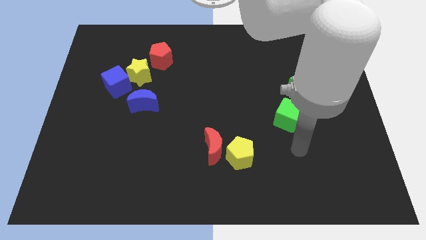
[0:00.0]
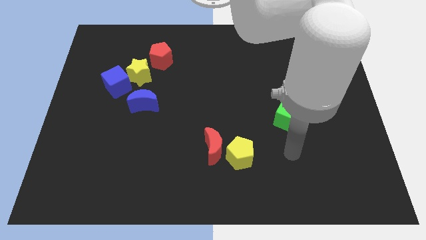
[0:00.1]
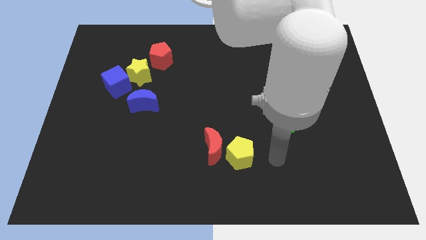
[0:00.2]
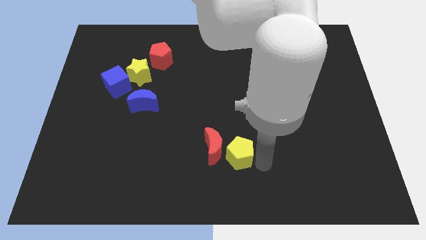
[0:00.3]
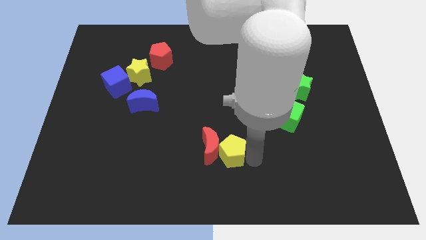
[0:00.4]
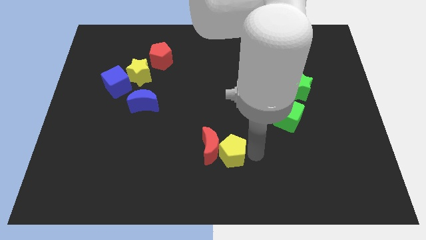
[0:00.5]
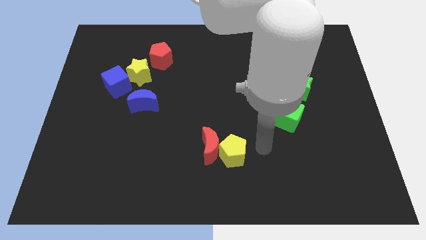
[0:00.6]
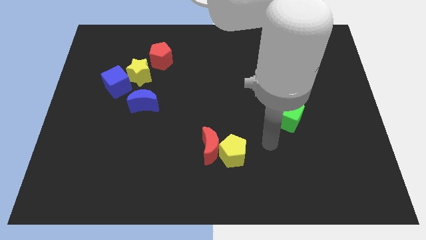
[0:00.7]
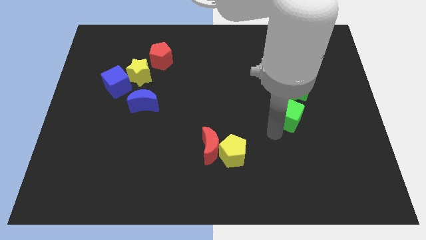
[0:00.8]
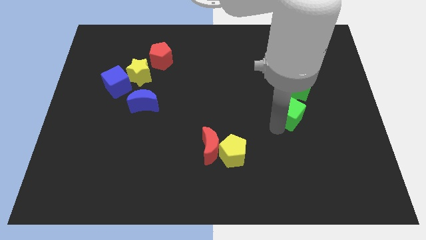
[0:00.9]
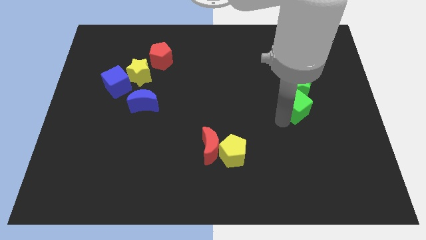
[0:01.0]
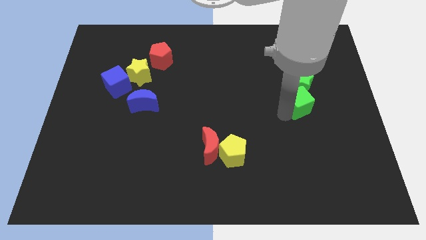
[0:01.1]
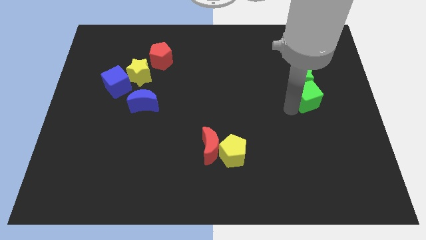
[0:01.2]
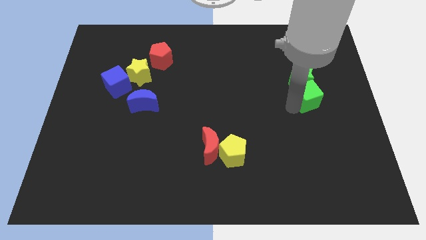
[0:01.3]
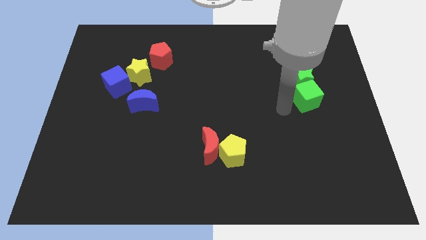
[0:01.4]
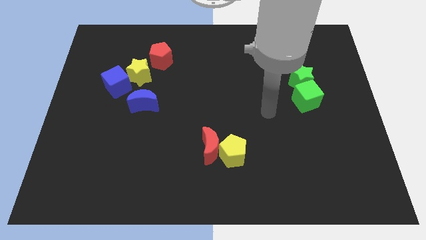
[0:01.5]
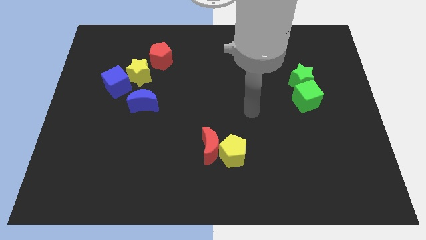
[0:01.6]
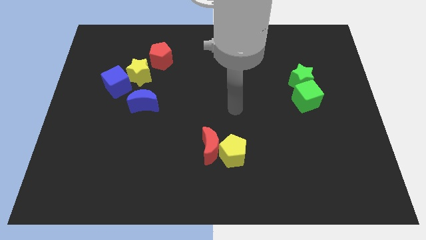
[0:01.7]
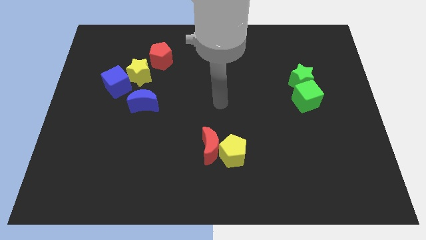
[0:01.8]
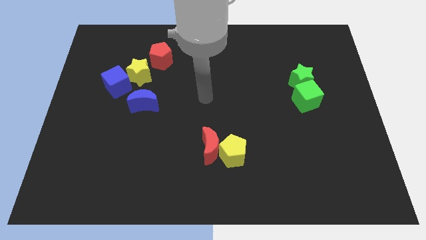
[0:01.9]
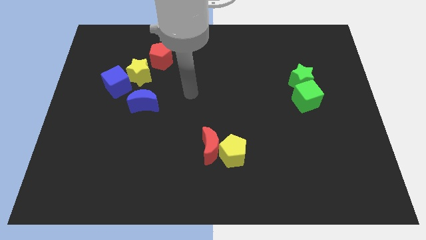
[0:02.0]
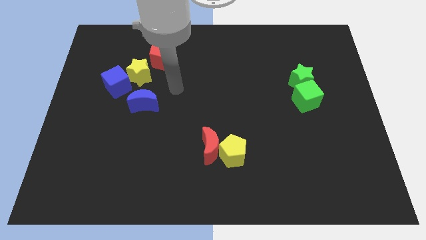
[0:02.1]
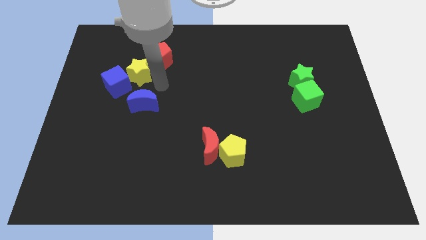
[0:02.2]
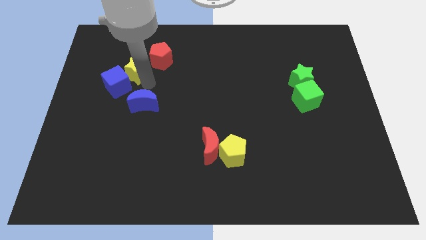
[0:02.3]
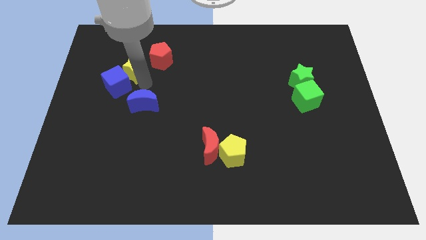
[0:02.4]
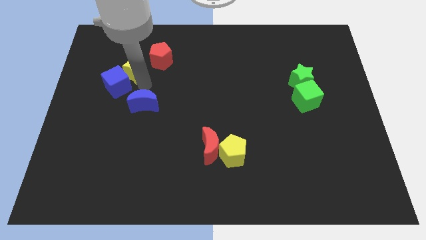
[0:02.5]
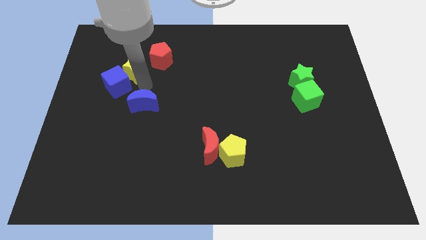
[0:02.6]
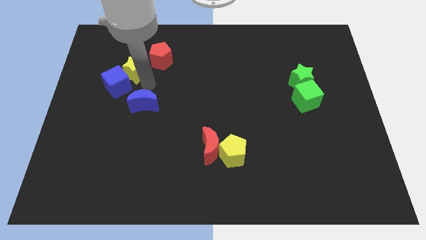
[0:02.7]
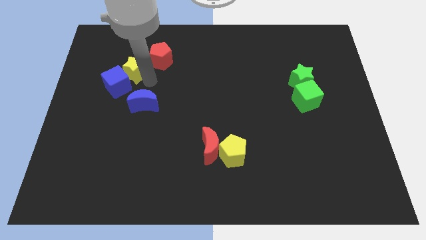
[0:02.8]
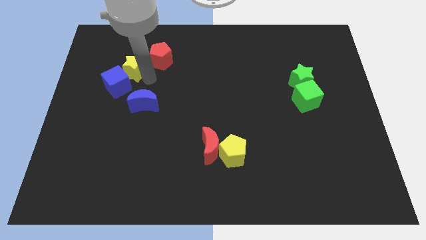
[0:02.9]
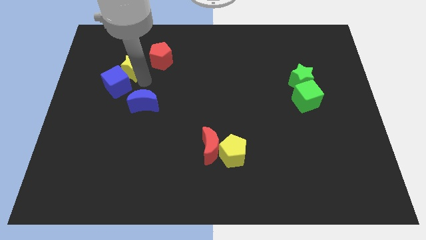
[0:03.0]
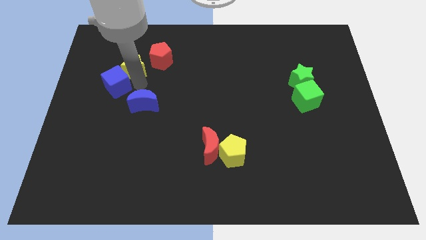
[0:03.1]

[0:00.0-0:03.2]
make a pair of blocks with red crescent and yellow pentagon and green star and cube

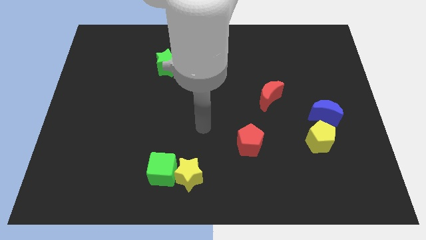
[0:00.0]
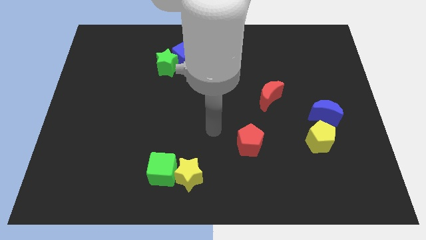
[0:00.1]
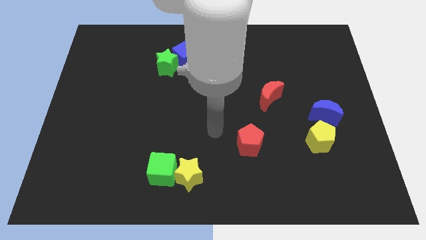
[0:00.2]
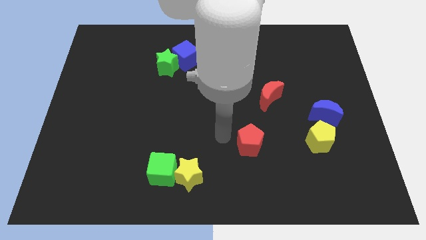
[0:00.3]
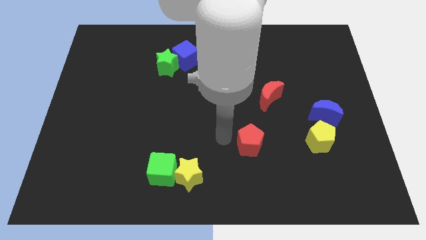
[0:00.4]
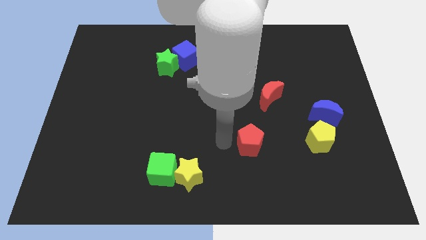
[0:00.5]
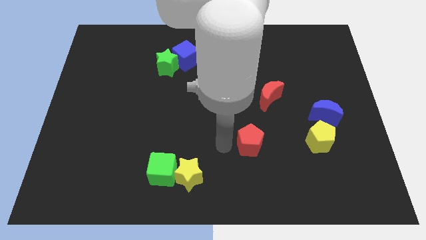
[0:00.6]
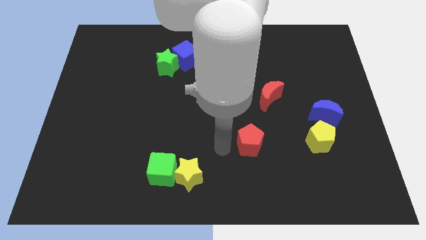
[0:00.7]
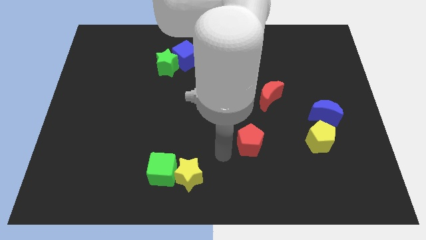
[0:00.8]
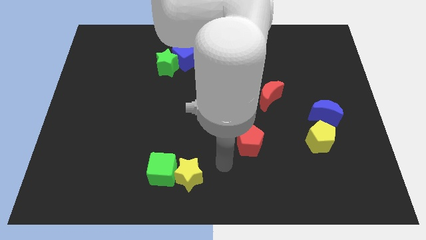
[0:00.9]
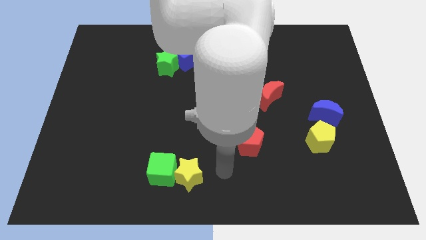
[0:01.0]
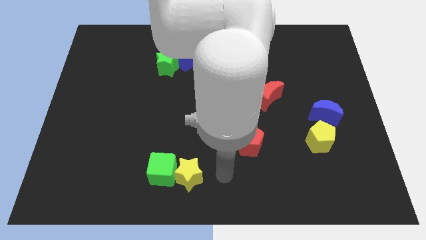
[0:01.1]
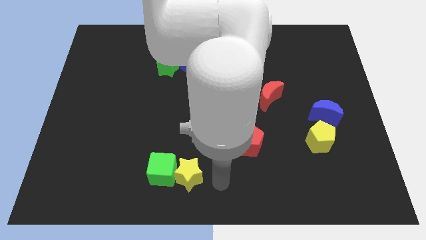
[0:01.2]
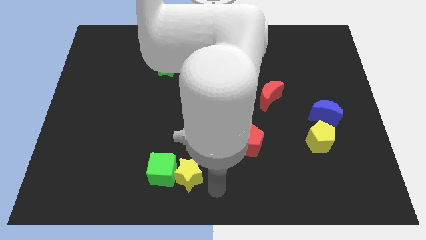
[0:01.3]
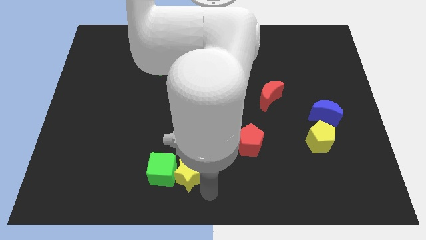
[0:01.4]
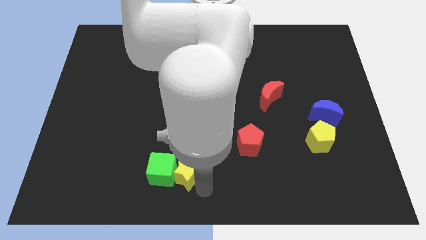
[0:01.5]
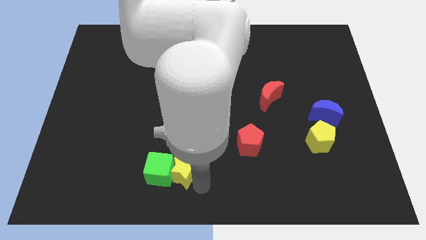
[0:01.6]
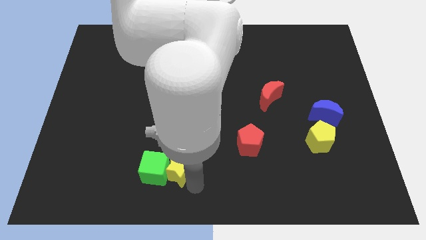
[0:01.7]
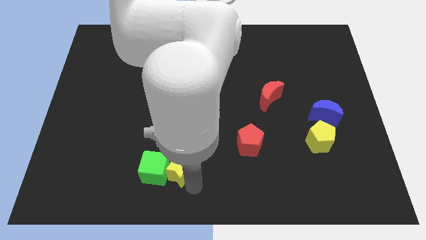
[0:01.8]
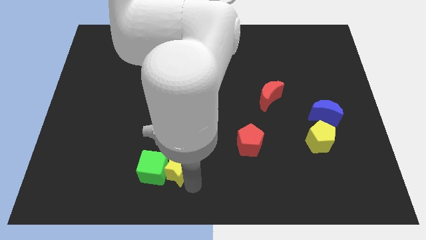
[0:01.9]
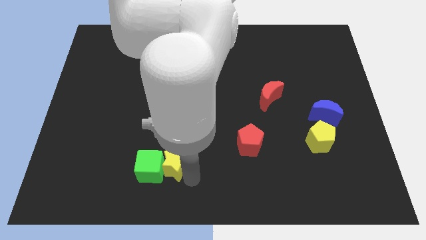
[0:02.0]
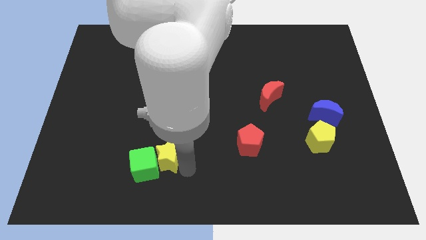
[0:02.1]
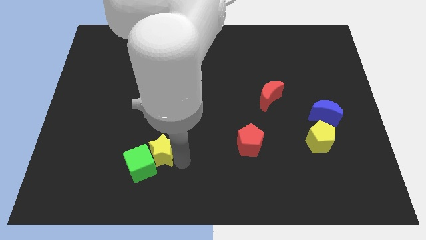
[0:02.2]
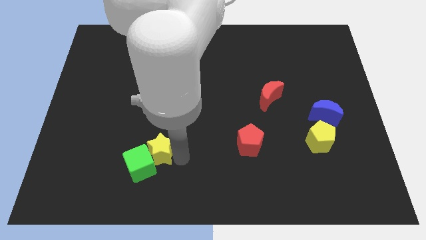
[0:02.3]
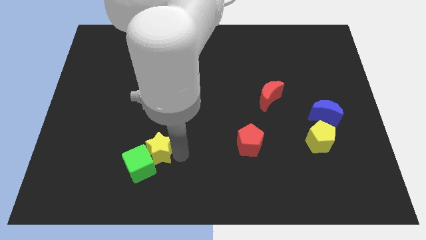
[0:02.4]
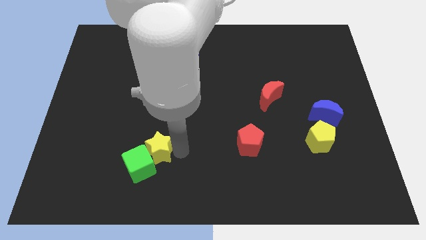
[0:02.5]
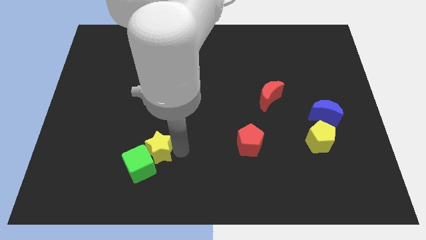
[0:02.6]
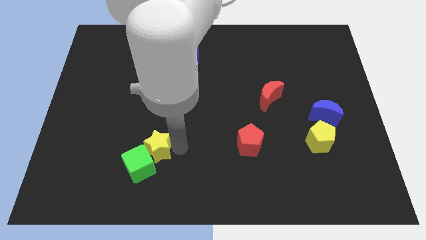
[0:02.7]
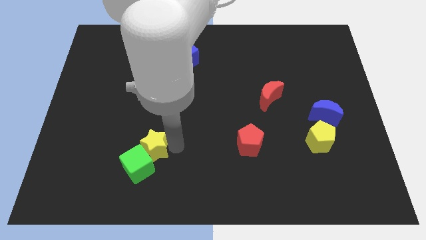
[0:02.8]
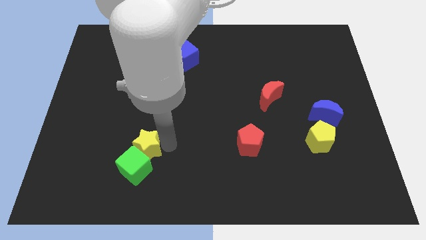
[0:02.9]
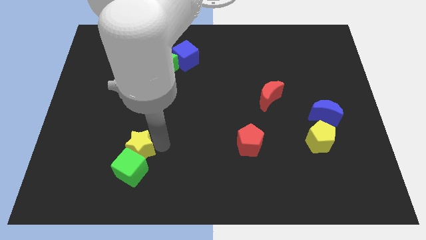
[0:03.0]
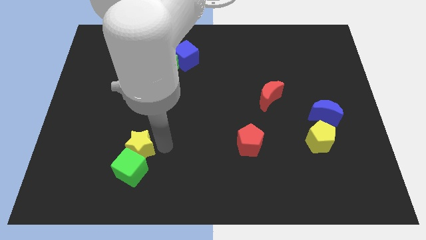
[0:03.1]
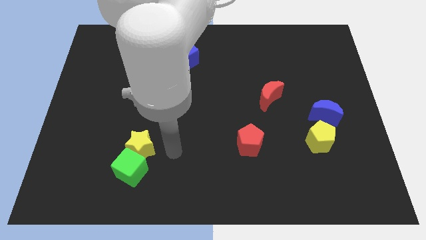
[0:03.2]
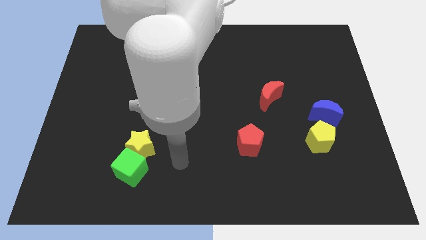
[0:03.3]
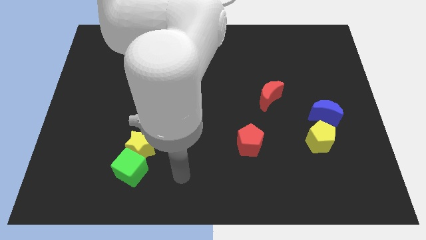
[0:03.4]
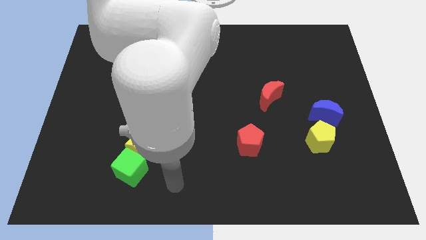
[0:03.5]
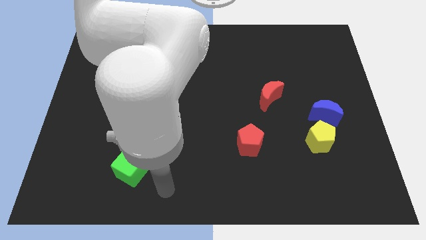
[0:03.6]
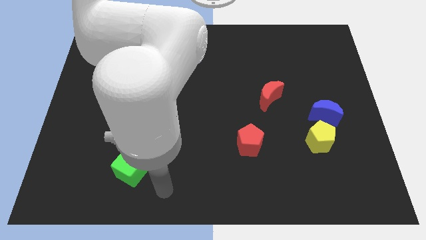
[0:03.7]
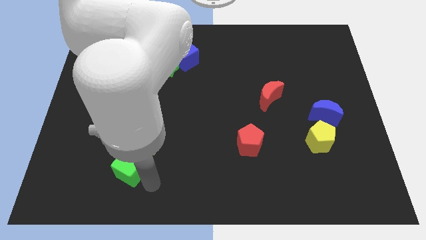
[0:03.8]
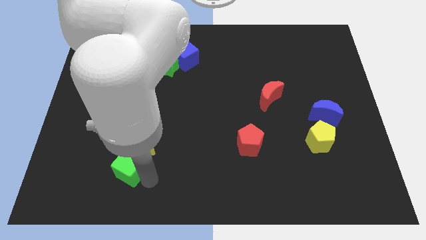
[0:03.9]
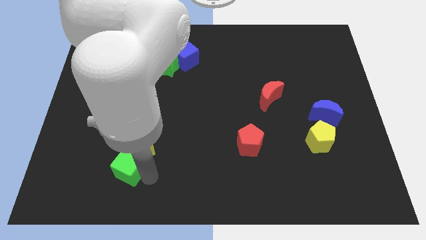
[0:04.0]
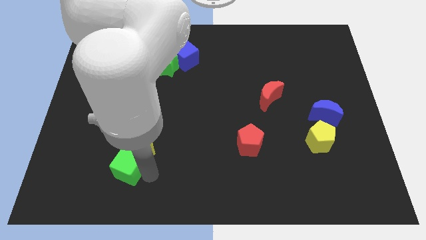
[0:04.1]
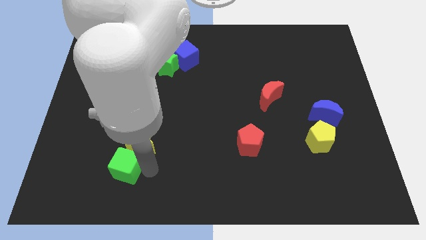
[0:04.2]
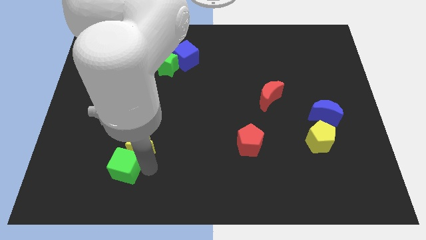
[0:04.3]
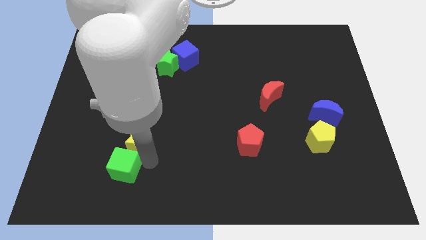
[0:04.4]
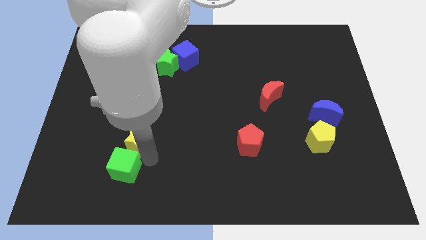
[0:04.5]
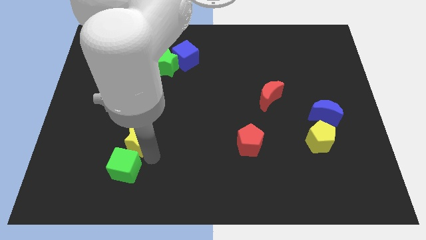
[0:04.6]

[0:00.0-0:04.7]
place the yellow star above the green cube

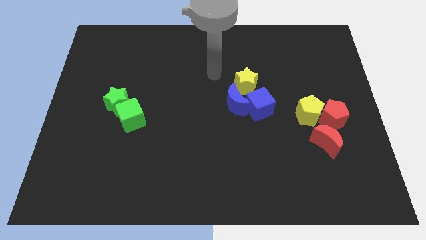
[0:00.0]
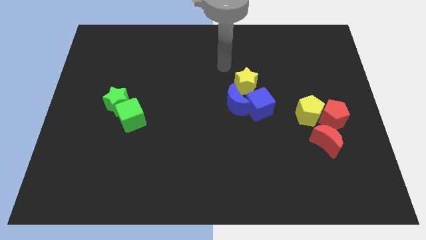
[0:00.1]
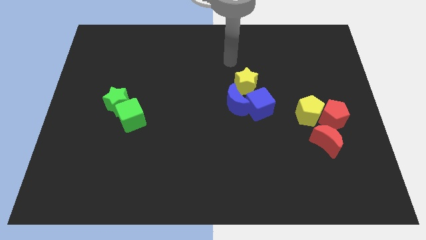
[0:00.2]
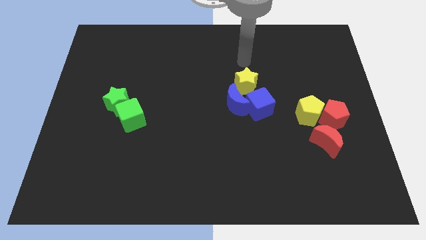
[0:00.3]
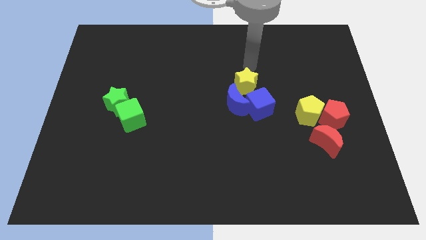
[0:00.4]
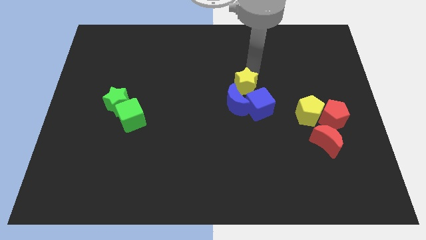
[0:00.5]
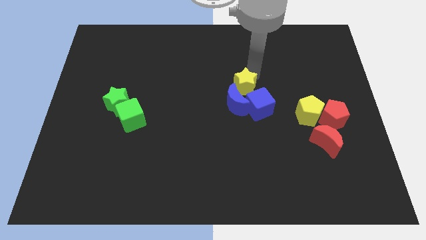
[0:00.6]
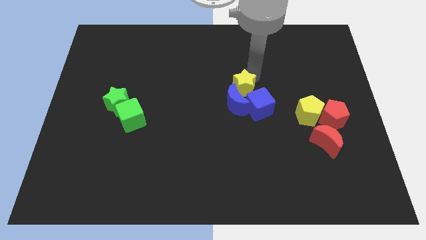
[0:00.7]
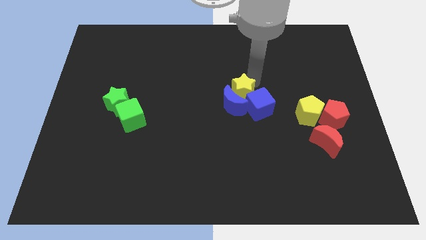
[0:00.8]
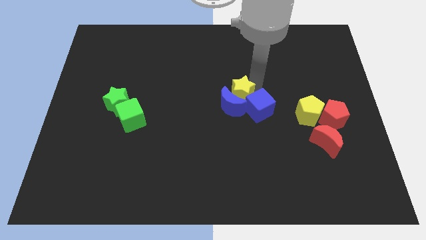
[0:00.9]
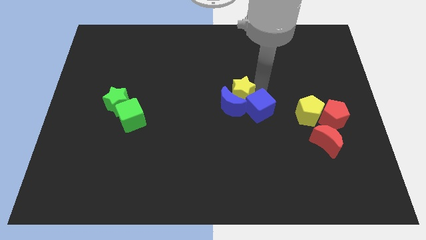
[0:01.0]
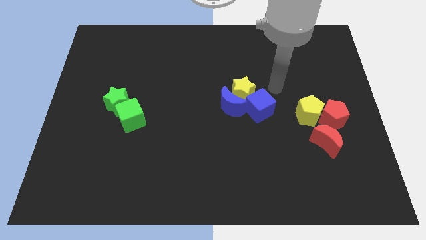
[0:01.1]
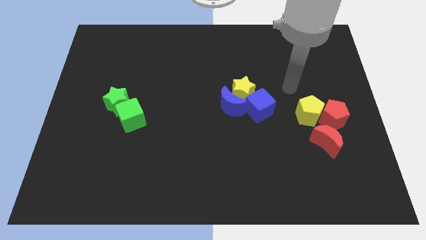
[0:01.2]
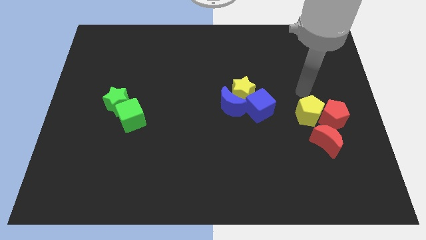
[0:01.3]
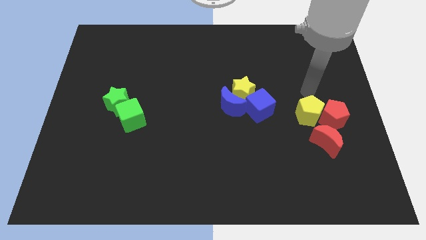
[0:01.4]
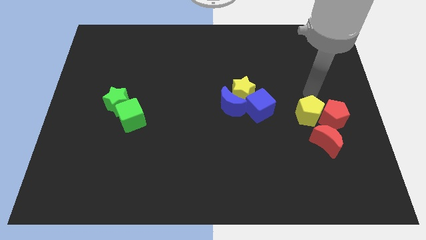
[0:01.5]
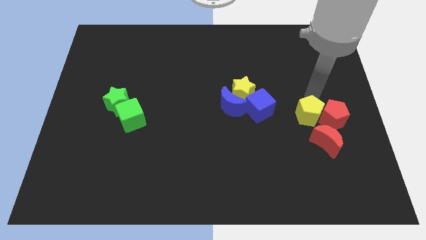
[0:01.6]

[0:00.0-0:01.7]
move the yellow star to the top of blue blocks
